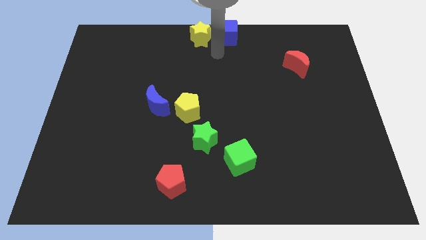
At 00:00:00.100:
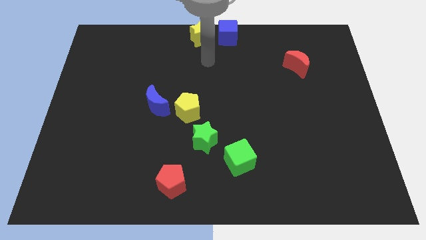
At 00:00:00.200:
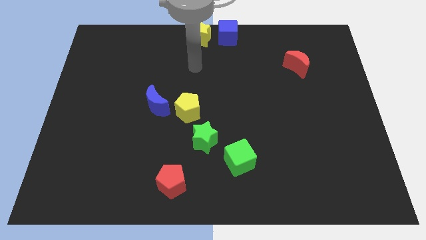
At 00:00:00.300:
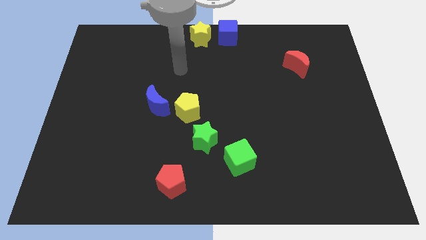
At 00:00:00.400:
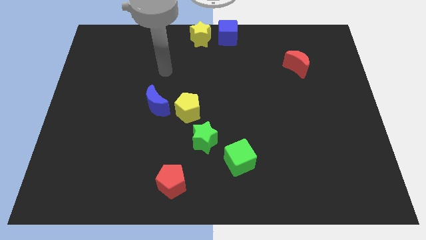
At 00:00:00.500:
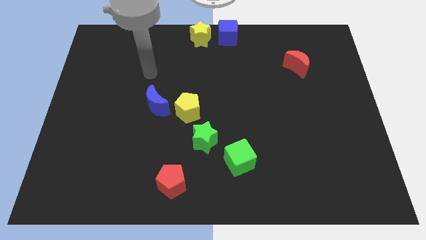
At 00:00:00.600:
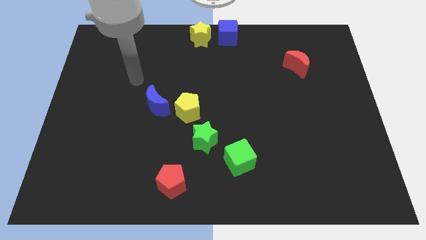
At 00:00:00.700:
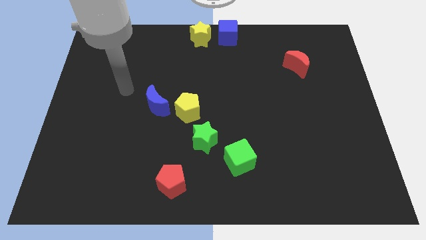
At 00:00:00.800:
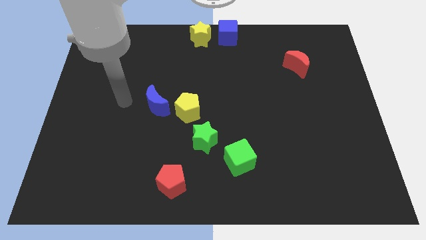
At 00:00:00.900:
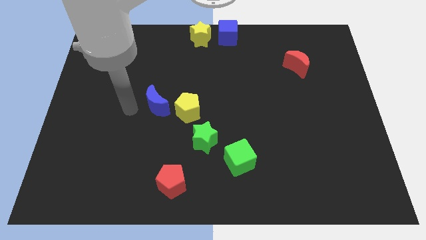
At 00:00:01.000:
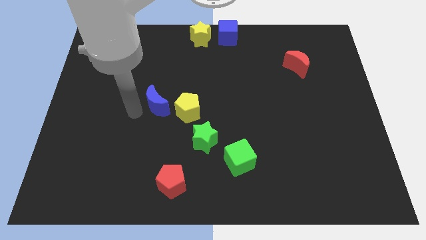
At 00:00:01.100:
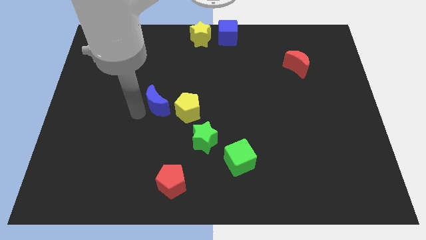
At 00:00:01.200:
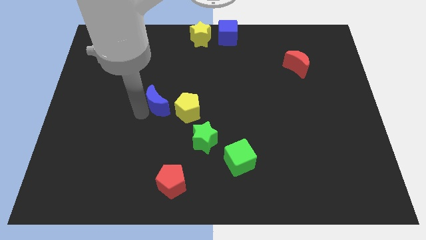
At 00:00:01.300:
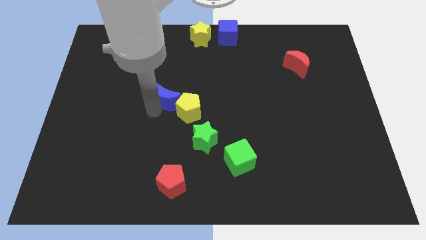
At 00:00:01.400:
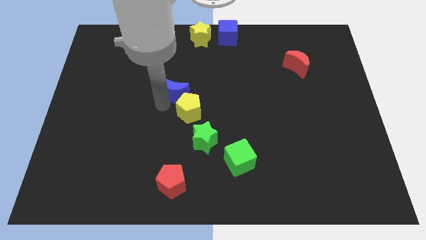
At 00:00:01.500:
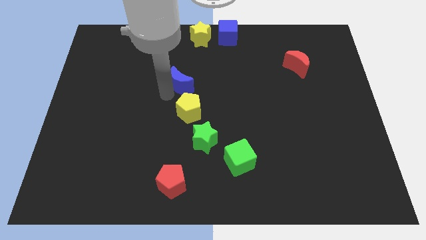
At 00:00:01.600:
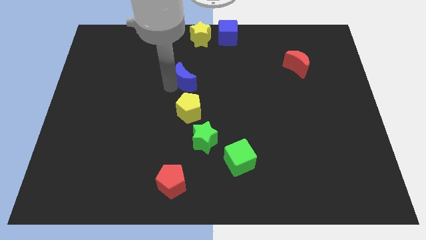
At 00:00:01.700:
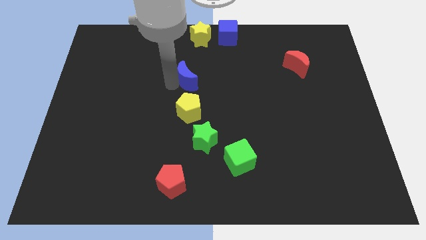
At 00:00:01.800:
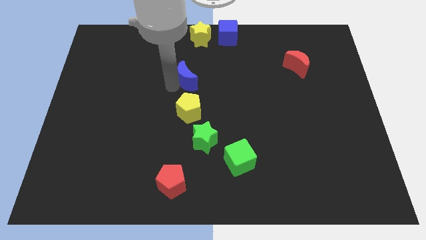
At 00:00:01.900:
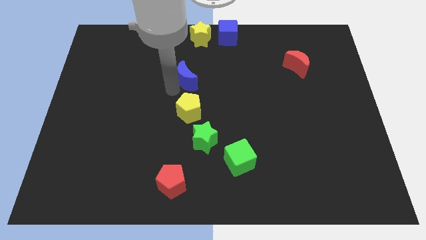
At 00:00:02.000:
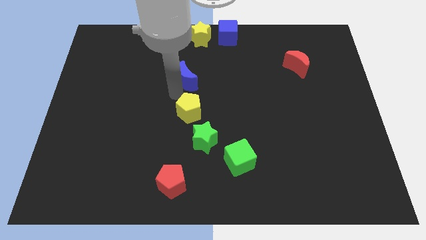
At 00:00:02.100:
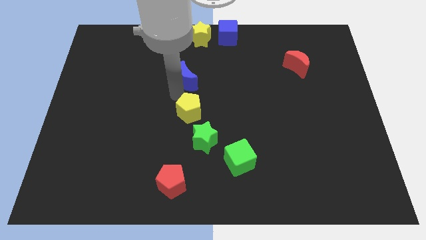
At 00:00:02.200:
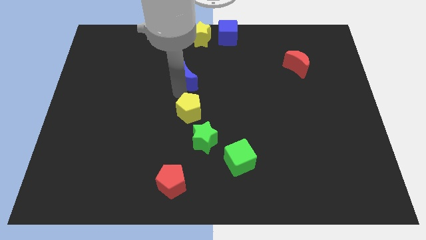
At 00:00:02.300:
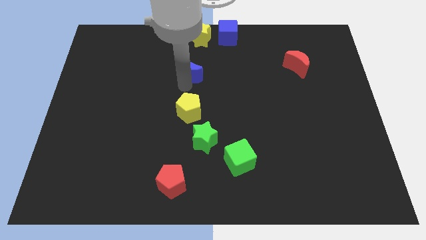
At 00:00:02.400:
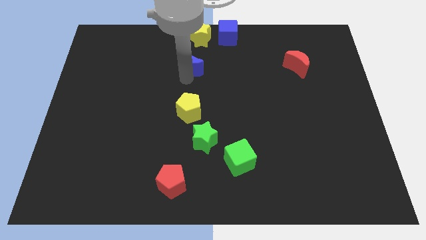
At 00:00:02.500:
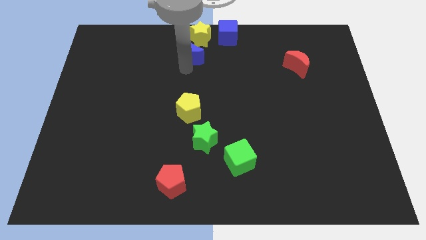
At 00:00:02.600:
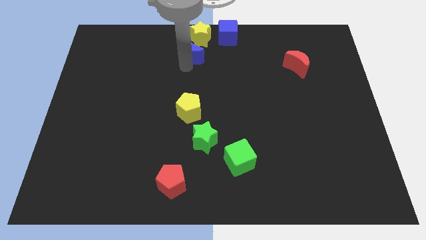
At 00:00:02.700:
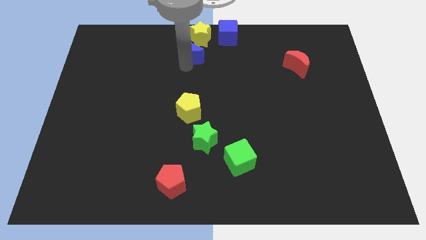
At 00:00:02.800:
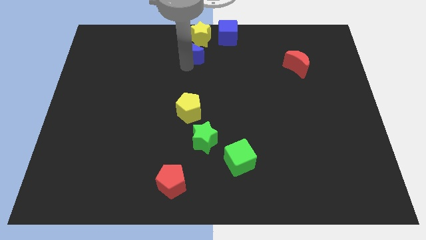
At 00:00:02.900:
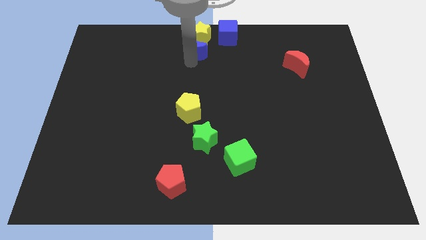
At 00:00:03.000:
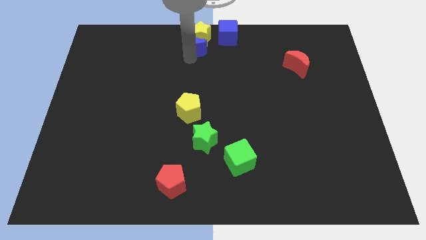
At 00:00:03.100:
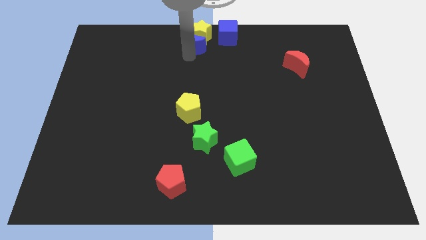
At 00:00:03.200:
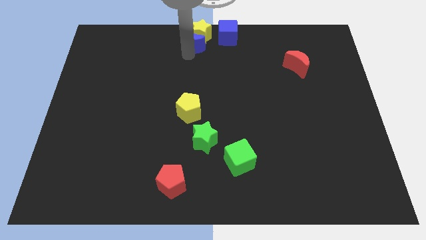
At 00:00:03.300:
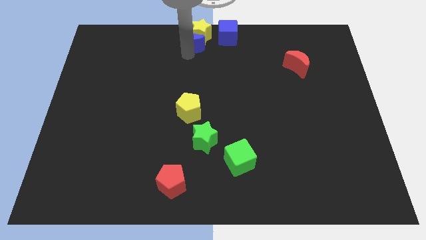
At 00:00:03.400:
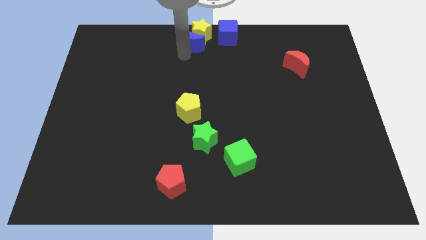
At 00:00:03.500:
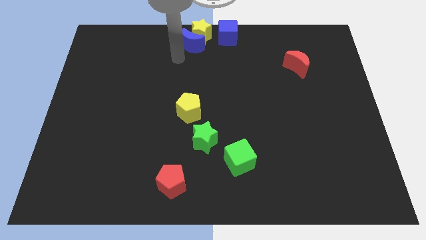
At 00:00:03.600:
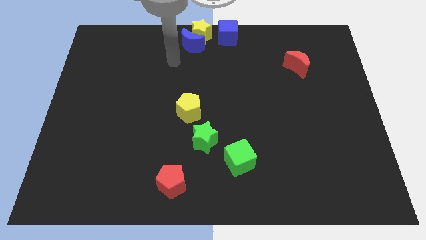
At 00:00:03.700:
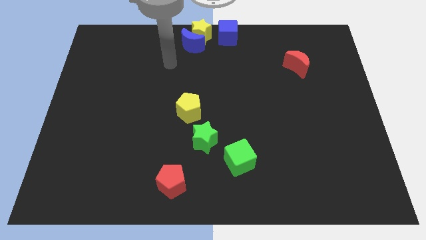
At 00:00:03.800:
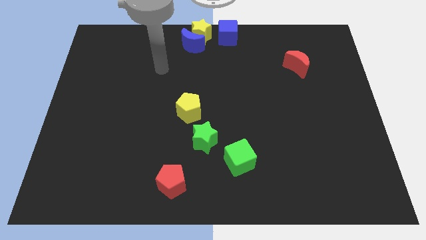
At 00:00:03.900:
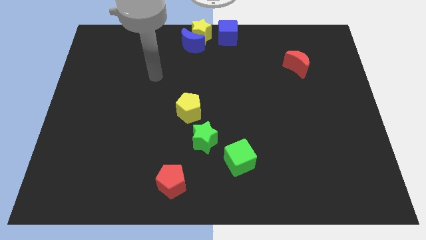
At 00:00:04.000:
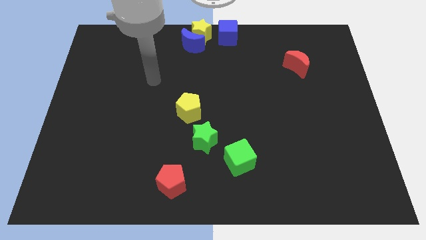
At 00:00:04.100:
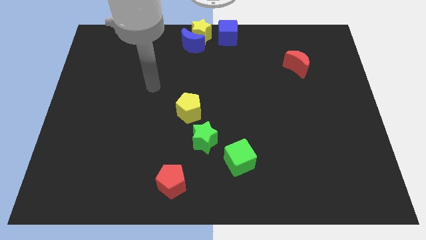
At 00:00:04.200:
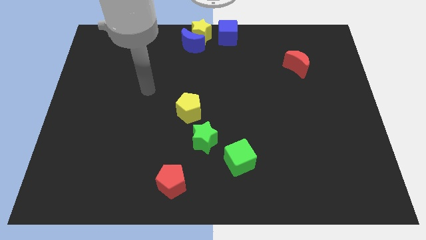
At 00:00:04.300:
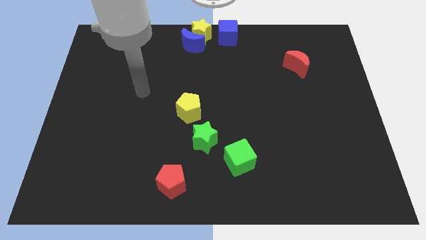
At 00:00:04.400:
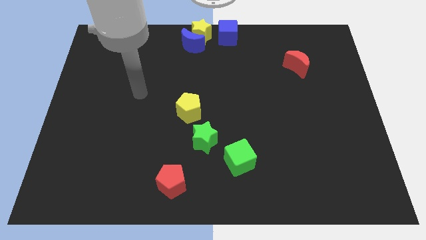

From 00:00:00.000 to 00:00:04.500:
push the blue crescent into the yellow star

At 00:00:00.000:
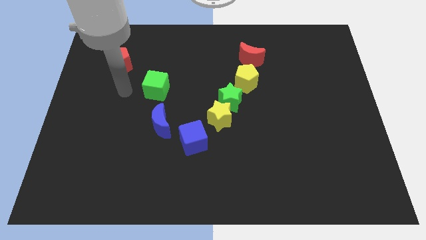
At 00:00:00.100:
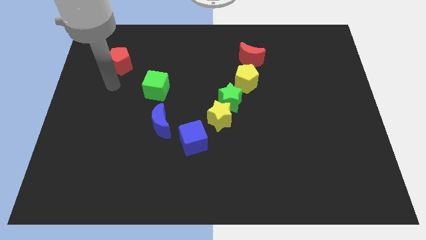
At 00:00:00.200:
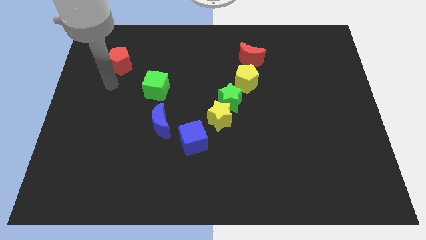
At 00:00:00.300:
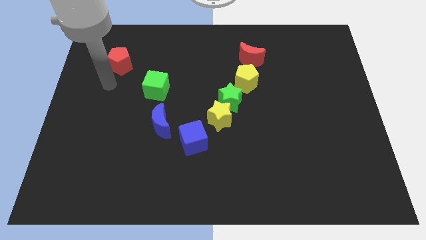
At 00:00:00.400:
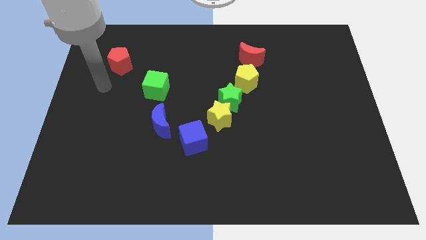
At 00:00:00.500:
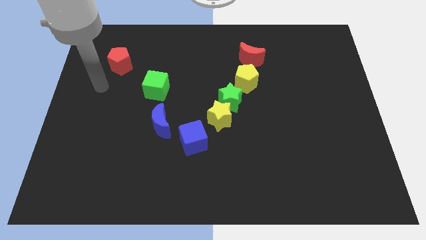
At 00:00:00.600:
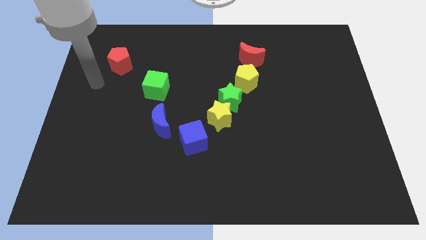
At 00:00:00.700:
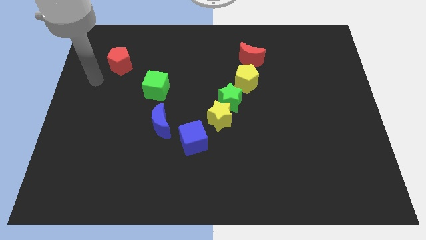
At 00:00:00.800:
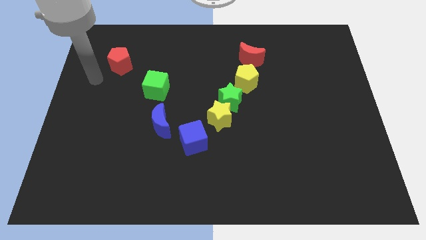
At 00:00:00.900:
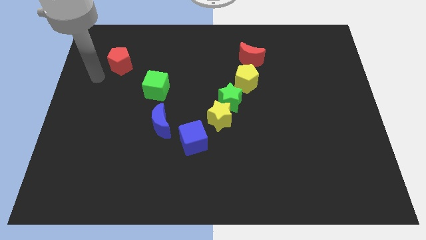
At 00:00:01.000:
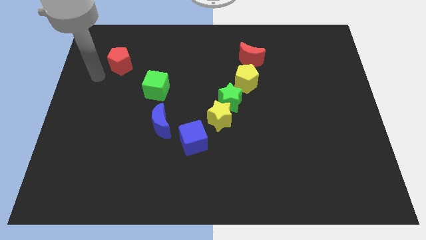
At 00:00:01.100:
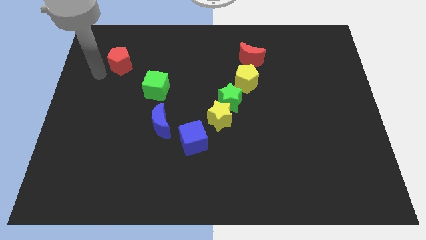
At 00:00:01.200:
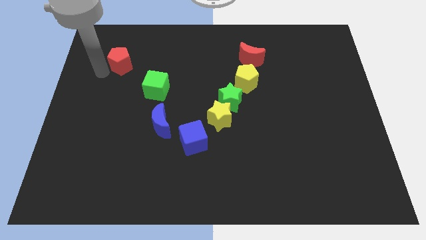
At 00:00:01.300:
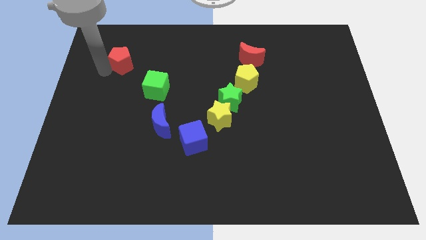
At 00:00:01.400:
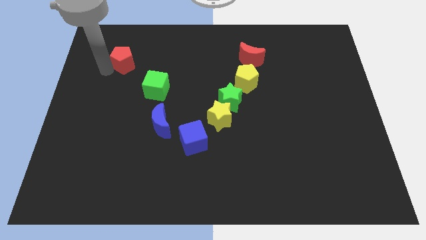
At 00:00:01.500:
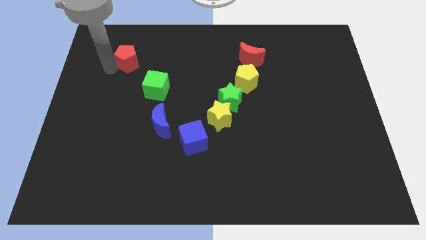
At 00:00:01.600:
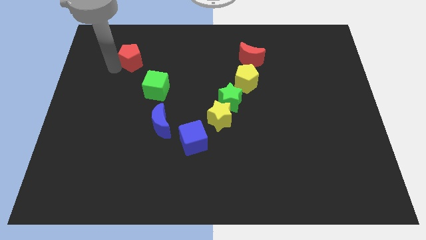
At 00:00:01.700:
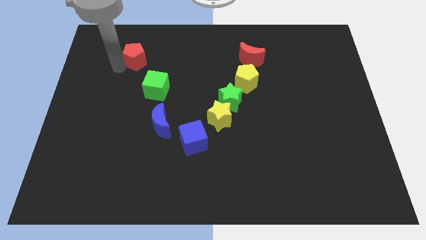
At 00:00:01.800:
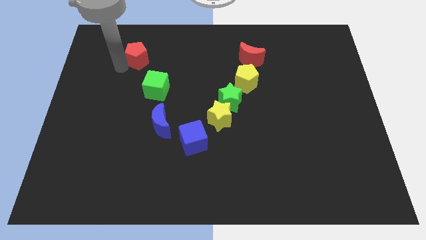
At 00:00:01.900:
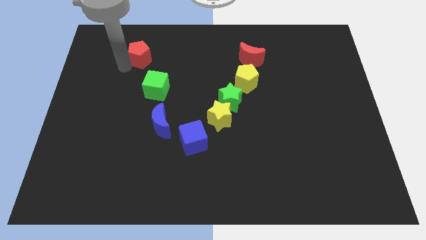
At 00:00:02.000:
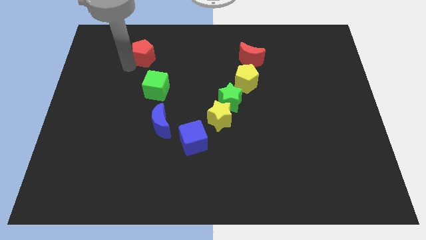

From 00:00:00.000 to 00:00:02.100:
move the red pentagon vertically to the top of the green cube

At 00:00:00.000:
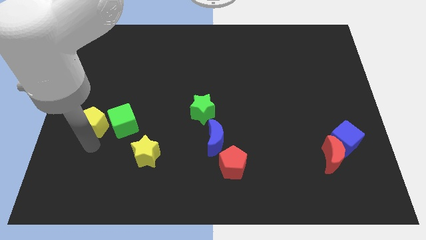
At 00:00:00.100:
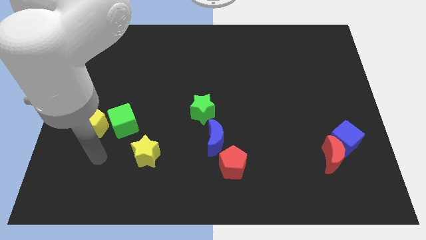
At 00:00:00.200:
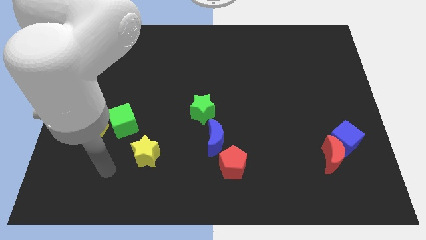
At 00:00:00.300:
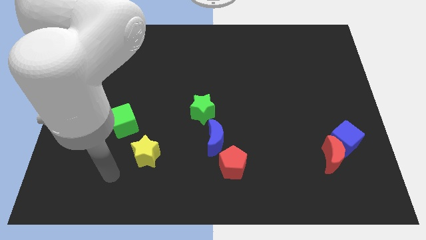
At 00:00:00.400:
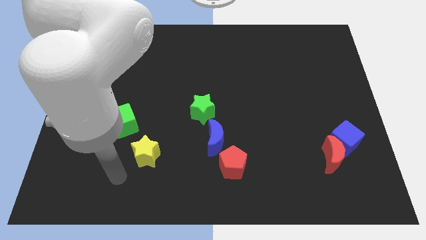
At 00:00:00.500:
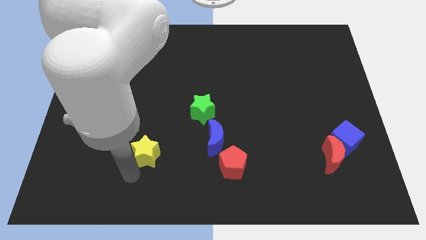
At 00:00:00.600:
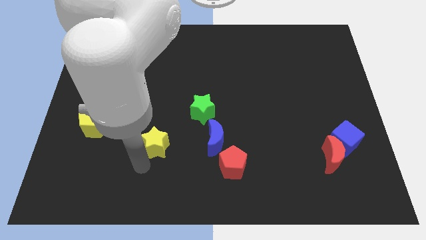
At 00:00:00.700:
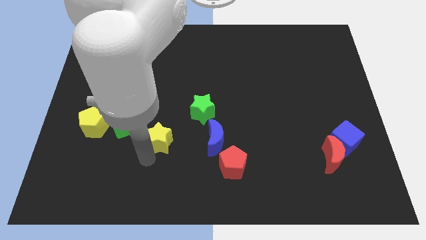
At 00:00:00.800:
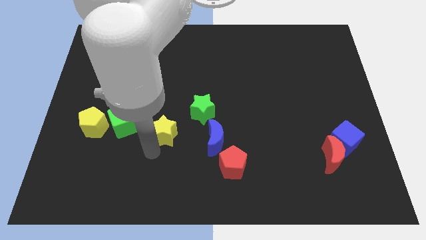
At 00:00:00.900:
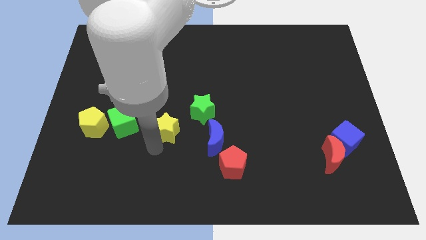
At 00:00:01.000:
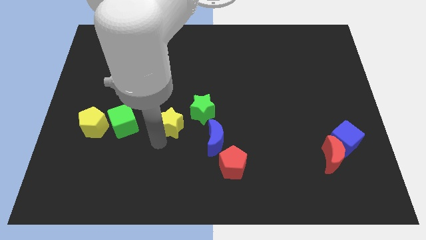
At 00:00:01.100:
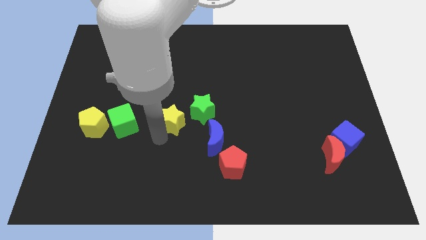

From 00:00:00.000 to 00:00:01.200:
move yellow star left below the green star

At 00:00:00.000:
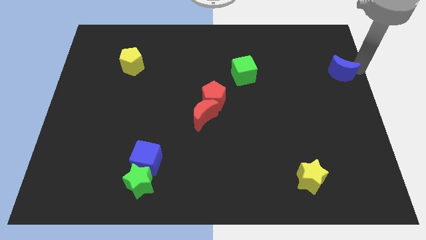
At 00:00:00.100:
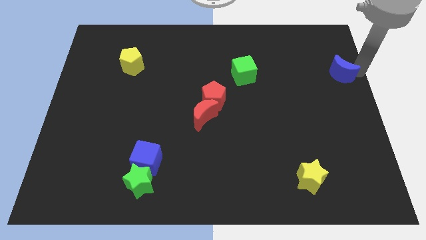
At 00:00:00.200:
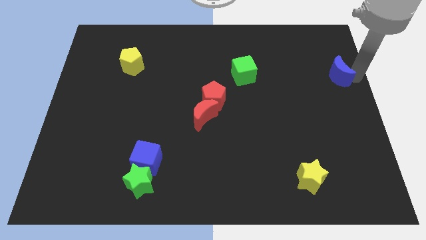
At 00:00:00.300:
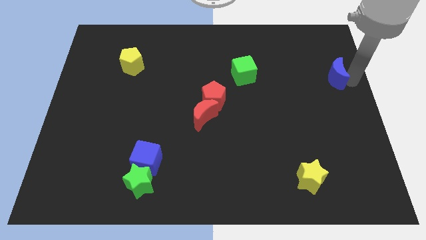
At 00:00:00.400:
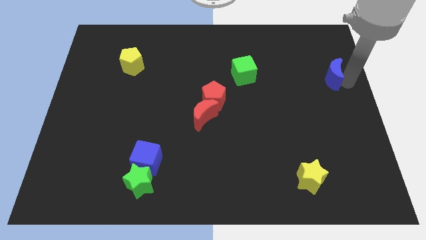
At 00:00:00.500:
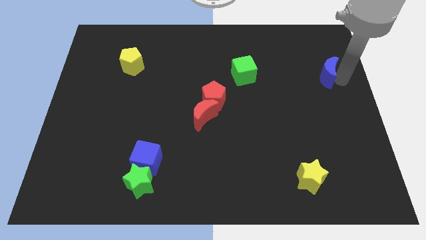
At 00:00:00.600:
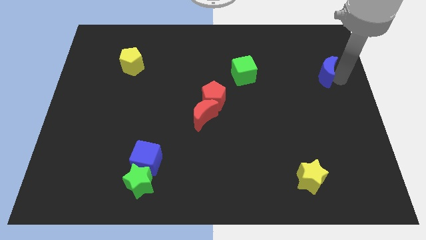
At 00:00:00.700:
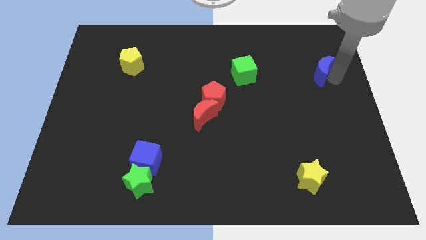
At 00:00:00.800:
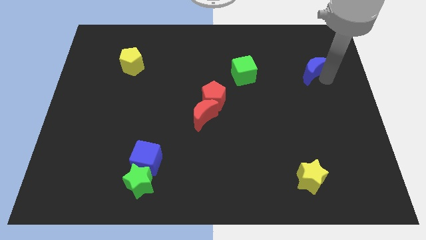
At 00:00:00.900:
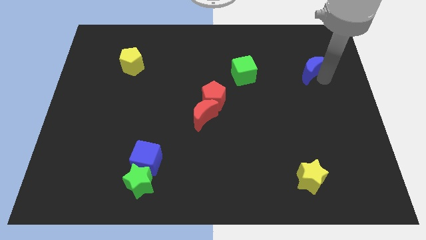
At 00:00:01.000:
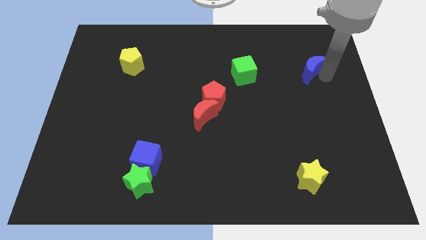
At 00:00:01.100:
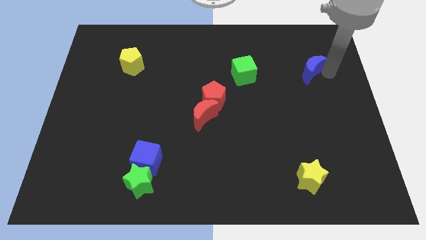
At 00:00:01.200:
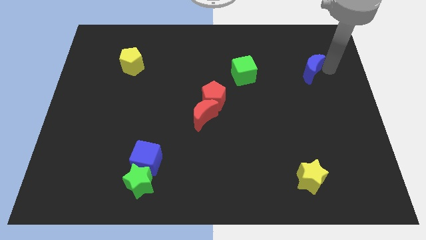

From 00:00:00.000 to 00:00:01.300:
push the blue crescent to the left
